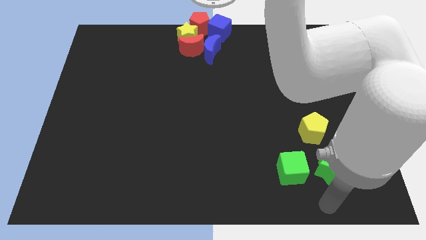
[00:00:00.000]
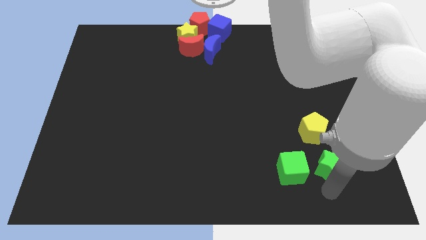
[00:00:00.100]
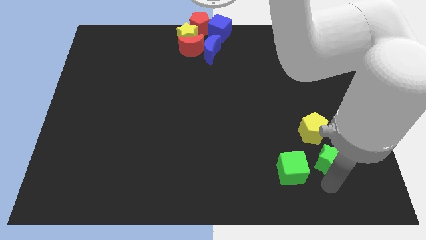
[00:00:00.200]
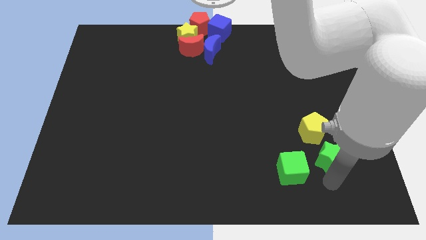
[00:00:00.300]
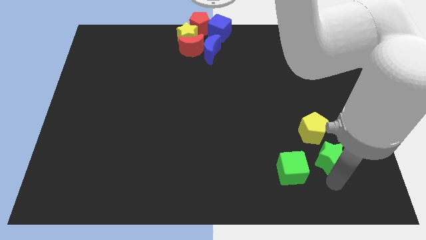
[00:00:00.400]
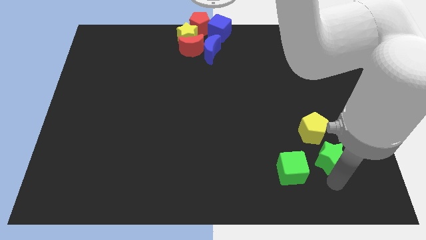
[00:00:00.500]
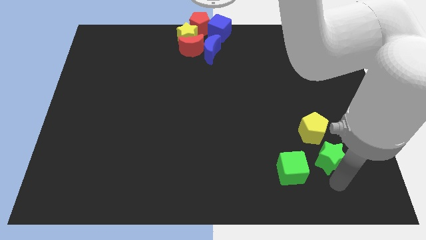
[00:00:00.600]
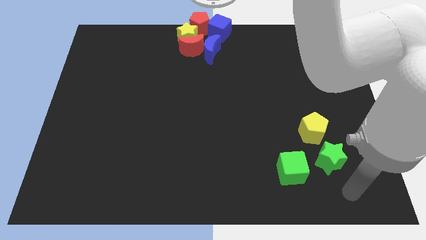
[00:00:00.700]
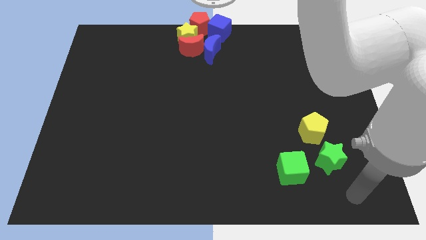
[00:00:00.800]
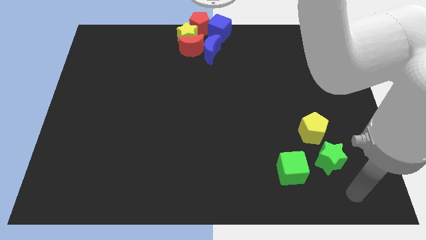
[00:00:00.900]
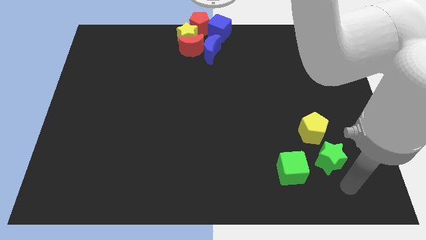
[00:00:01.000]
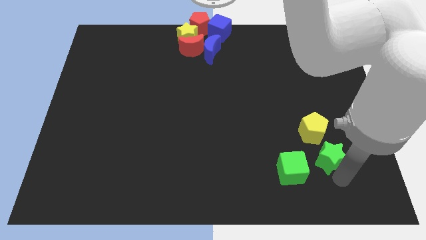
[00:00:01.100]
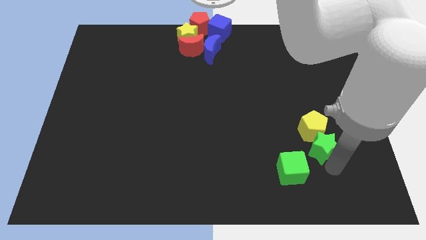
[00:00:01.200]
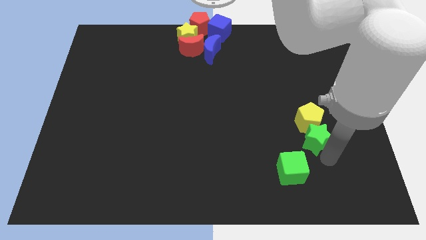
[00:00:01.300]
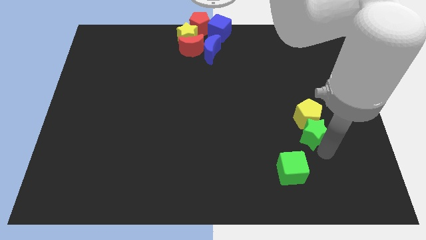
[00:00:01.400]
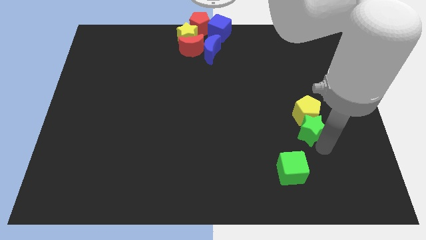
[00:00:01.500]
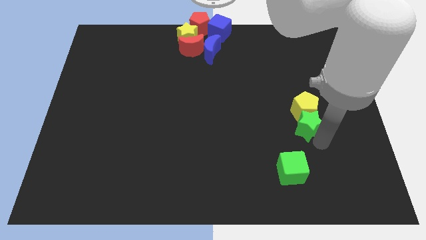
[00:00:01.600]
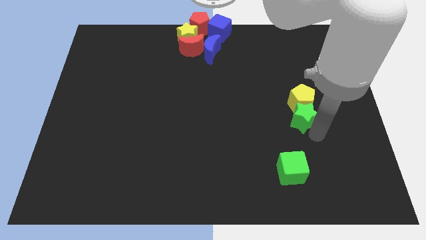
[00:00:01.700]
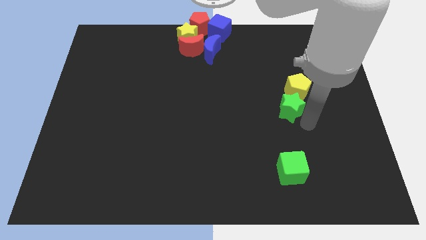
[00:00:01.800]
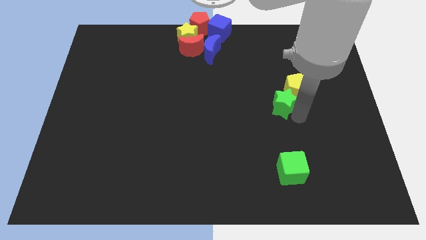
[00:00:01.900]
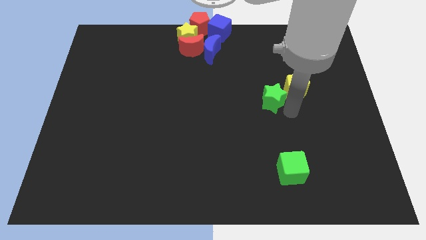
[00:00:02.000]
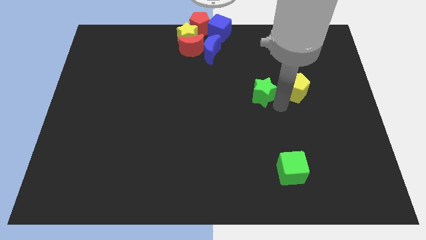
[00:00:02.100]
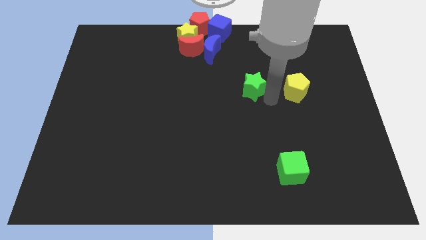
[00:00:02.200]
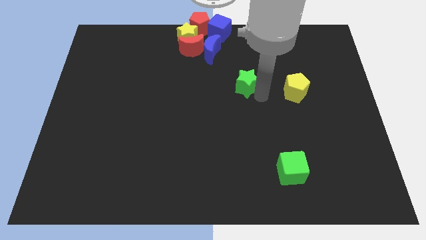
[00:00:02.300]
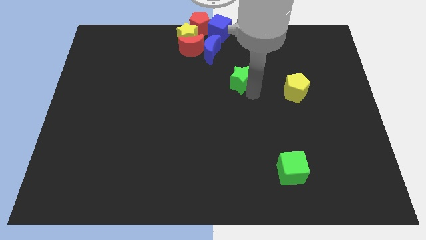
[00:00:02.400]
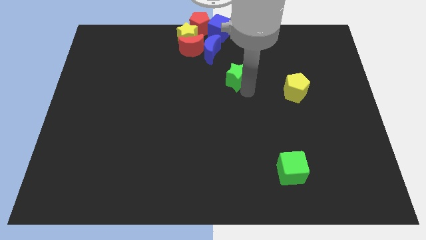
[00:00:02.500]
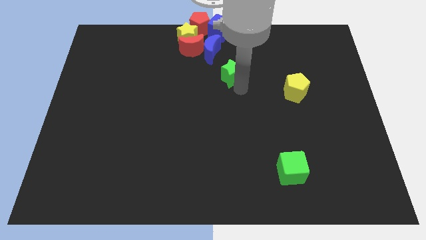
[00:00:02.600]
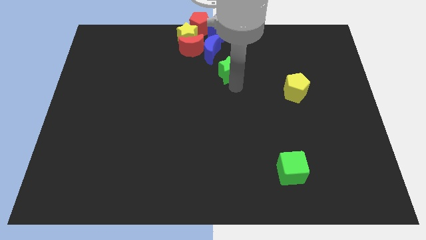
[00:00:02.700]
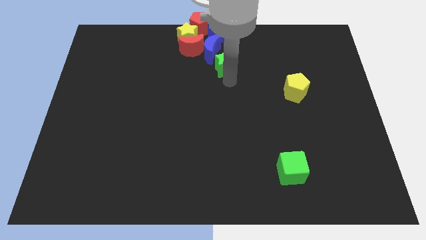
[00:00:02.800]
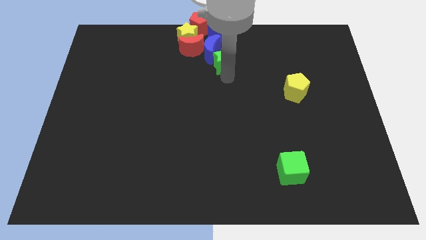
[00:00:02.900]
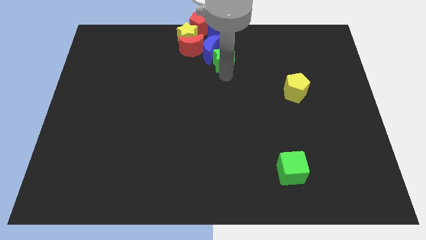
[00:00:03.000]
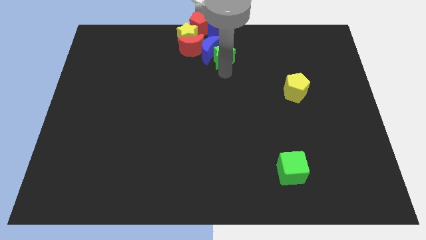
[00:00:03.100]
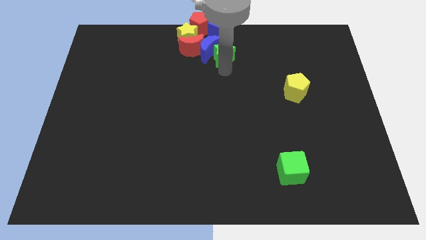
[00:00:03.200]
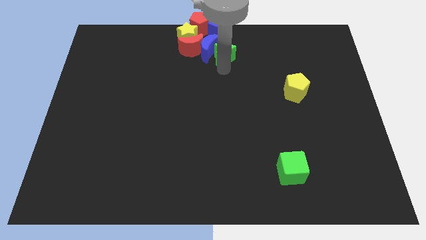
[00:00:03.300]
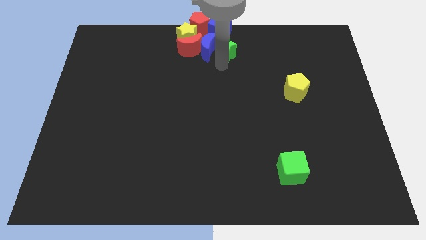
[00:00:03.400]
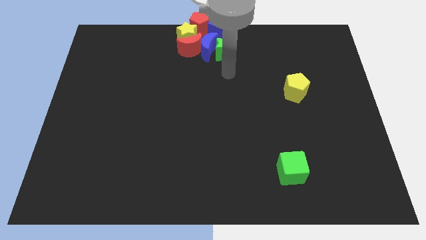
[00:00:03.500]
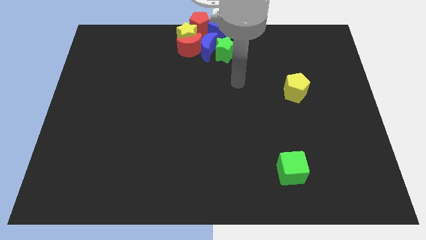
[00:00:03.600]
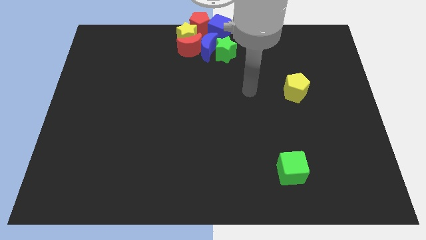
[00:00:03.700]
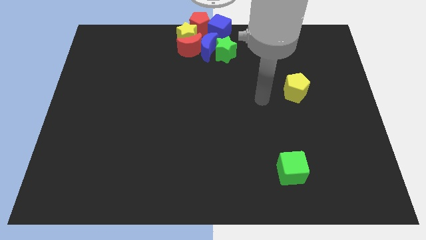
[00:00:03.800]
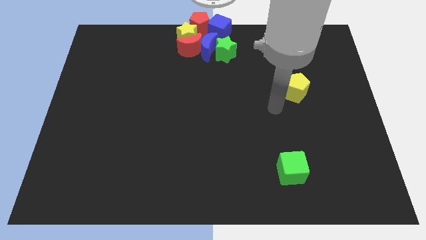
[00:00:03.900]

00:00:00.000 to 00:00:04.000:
push green star in to blue moon

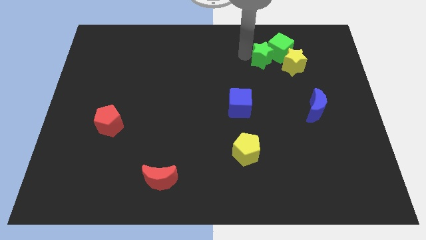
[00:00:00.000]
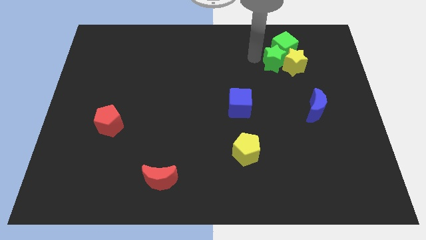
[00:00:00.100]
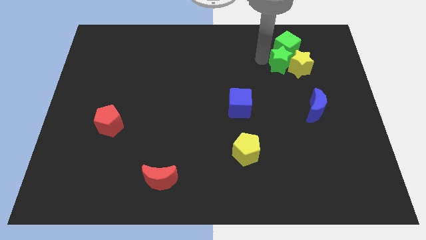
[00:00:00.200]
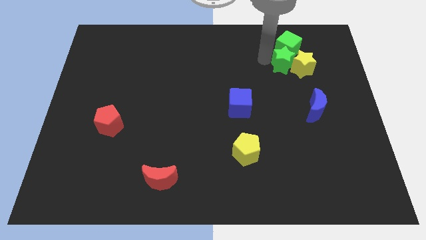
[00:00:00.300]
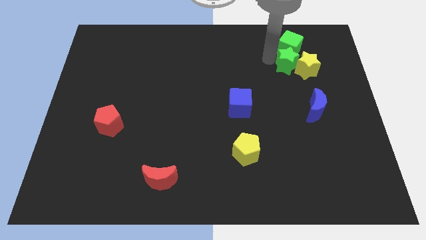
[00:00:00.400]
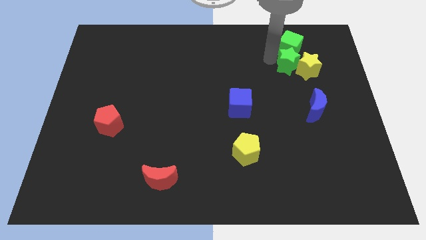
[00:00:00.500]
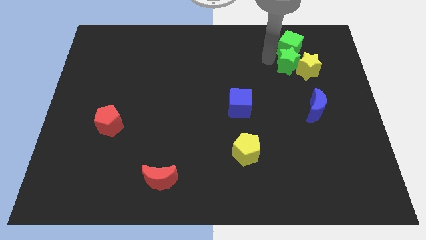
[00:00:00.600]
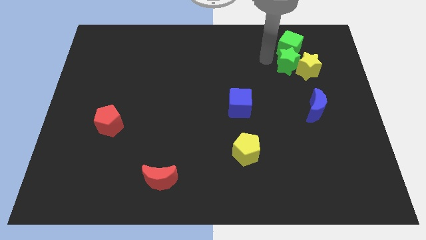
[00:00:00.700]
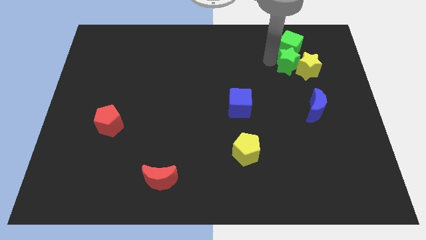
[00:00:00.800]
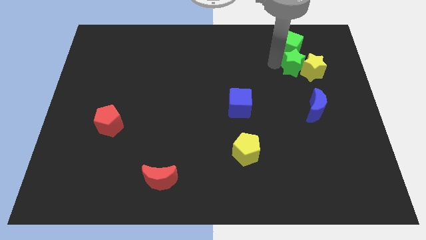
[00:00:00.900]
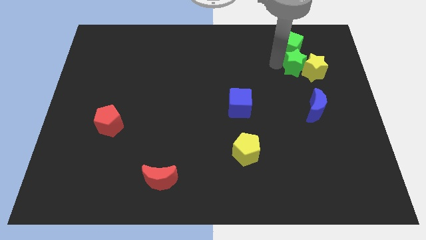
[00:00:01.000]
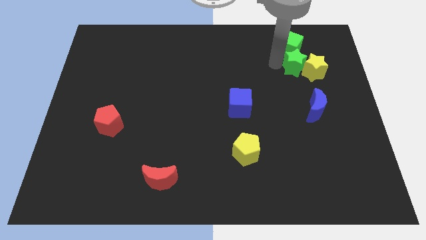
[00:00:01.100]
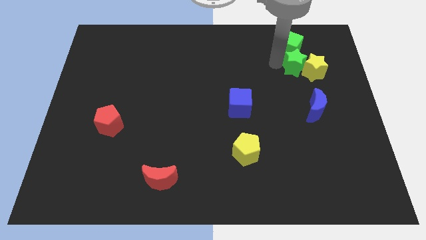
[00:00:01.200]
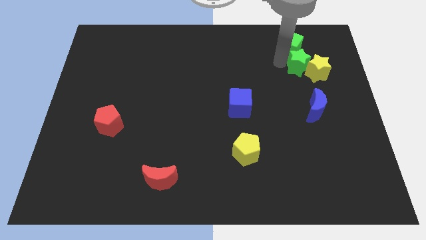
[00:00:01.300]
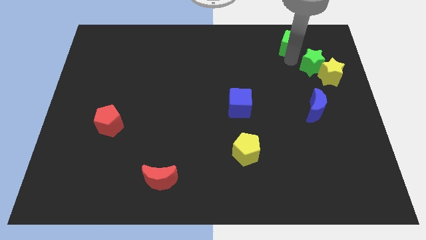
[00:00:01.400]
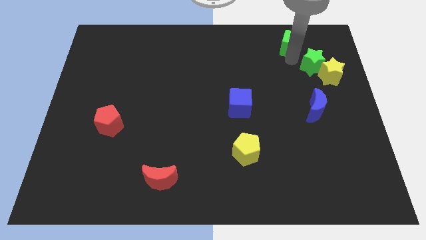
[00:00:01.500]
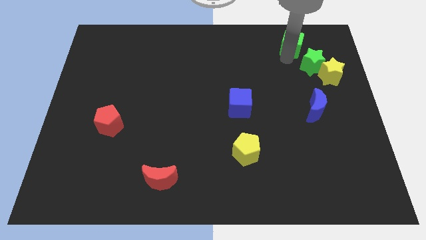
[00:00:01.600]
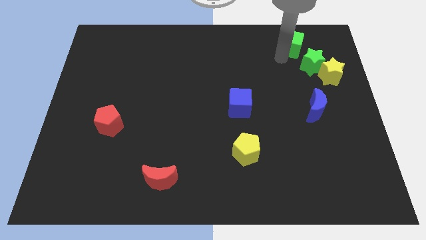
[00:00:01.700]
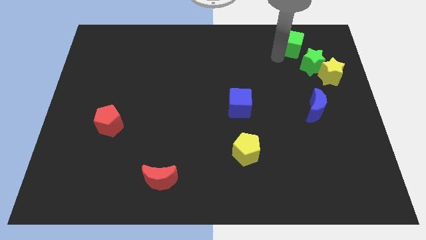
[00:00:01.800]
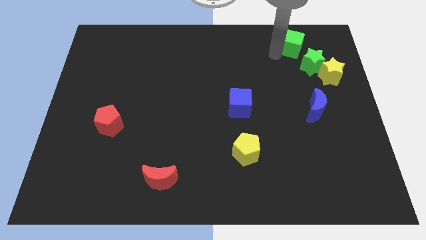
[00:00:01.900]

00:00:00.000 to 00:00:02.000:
move the yellow star to the right side of the board with the help of green star

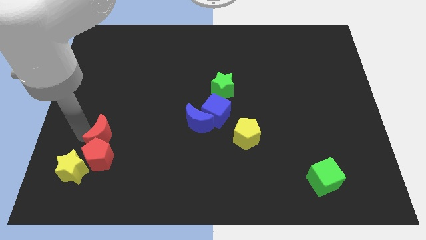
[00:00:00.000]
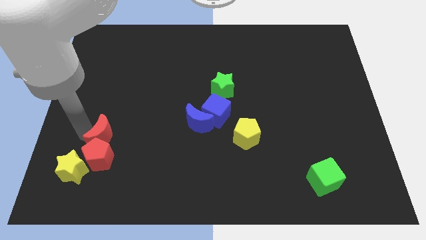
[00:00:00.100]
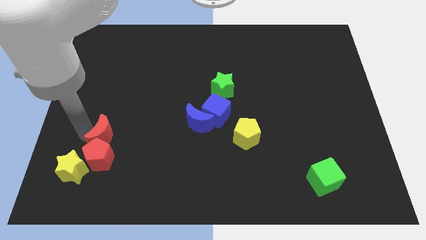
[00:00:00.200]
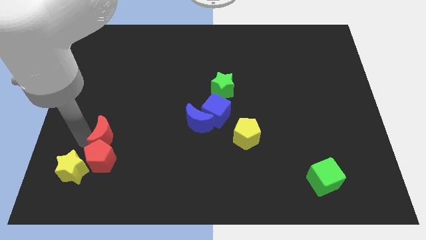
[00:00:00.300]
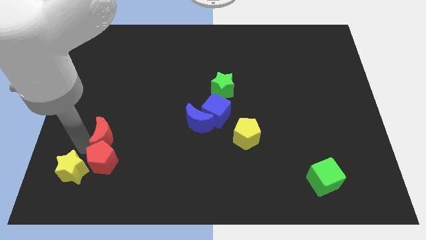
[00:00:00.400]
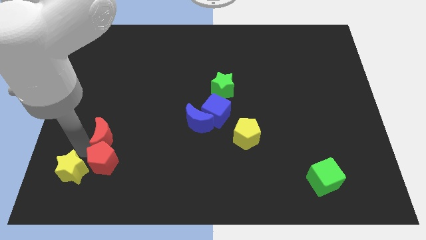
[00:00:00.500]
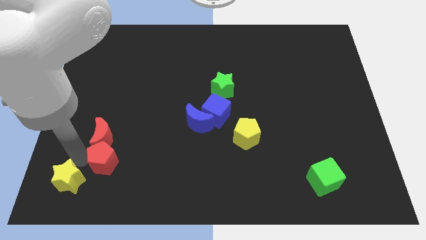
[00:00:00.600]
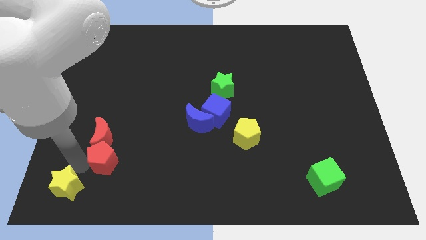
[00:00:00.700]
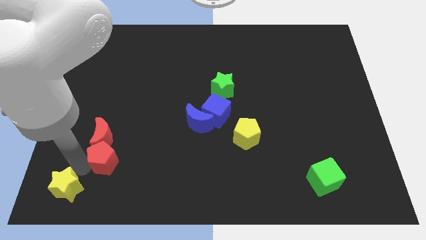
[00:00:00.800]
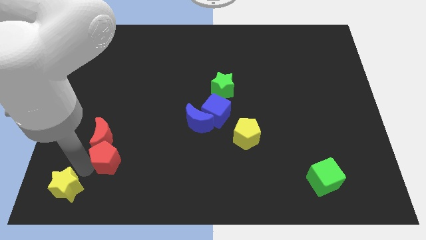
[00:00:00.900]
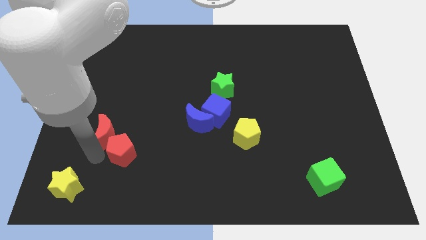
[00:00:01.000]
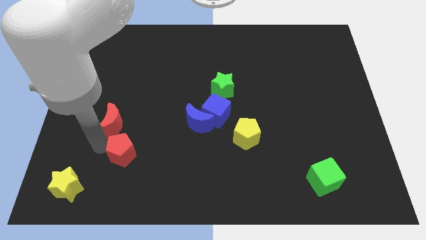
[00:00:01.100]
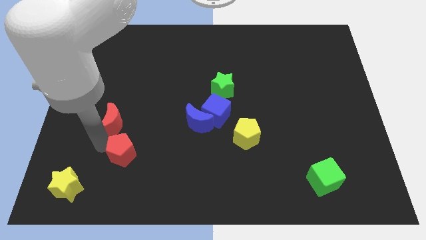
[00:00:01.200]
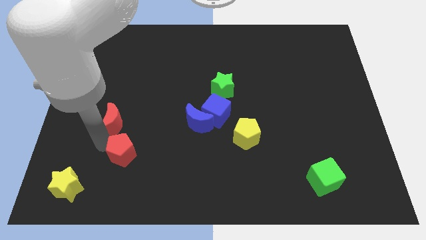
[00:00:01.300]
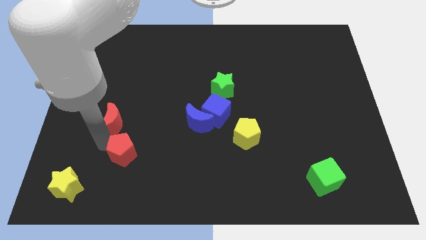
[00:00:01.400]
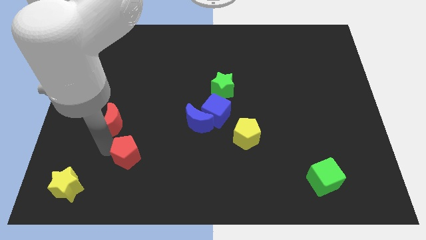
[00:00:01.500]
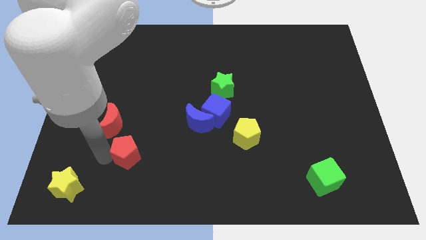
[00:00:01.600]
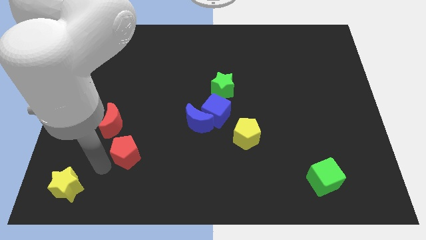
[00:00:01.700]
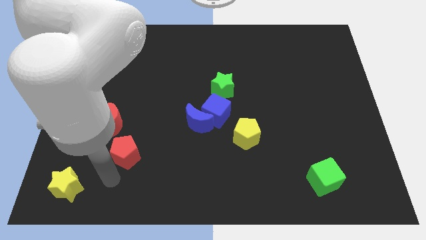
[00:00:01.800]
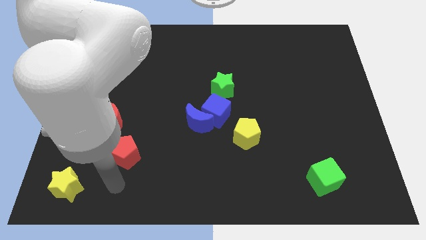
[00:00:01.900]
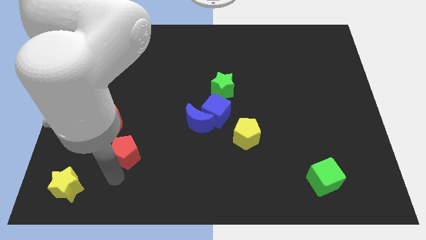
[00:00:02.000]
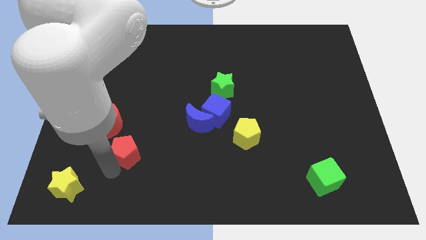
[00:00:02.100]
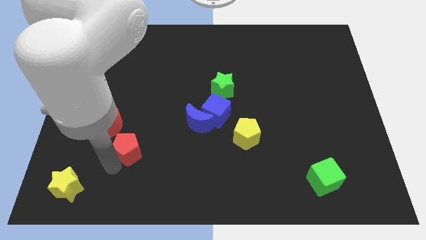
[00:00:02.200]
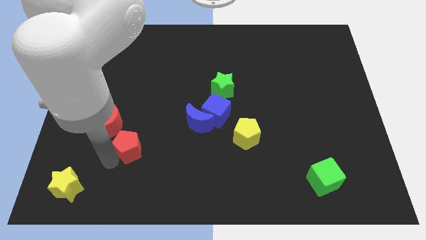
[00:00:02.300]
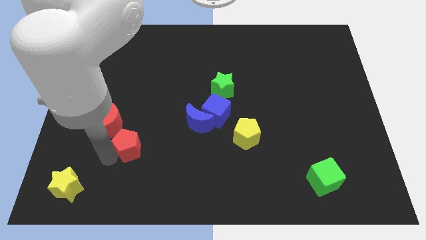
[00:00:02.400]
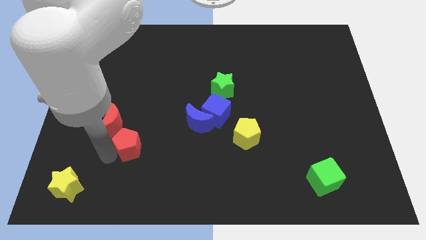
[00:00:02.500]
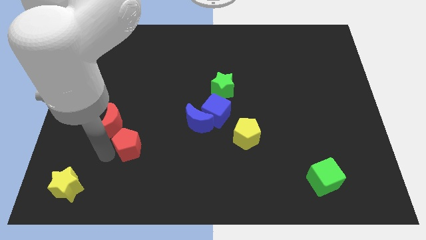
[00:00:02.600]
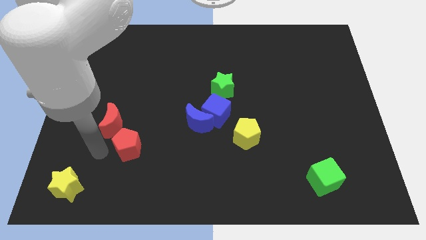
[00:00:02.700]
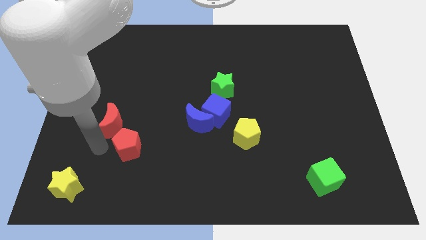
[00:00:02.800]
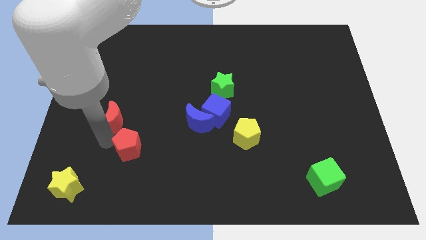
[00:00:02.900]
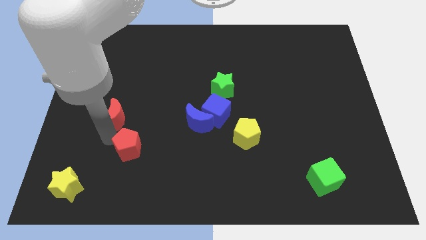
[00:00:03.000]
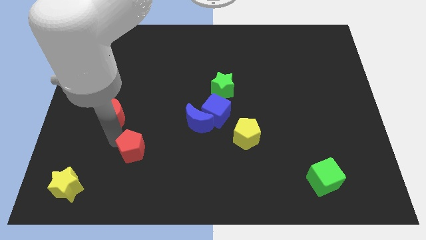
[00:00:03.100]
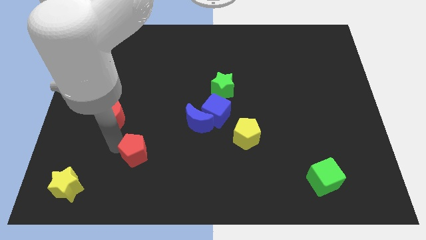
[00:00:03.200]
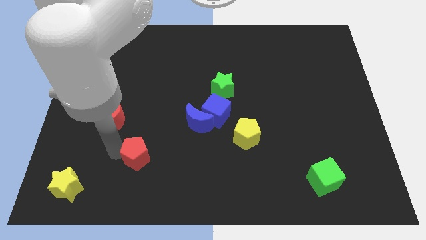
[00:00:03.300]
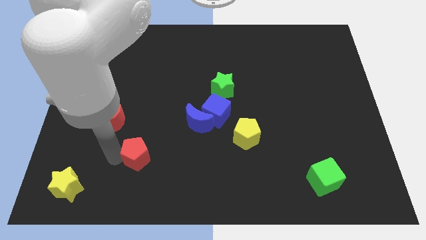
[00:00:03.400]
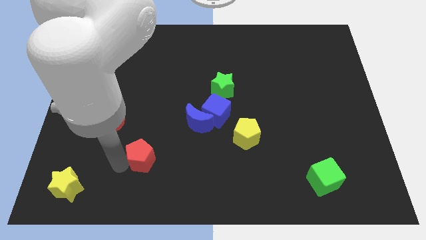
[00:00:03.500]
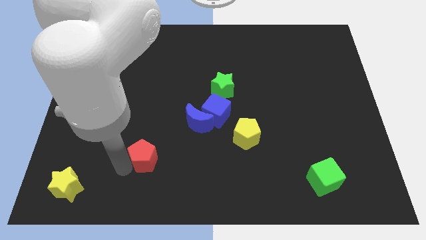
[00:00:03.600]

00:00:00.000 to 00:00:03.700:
separate red pentagon from red crescent
